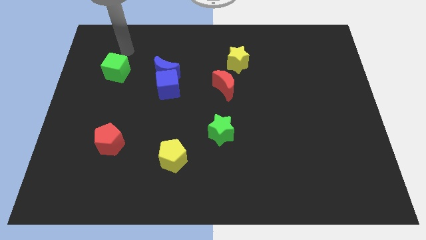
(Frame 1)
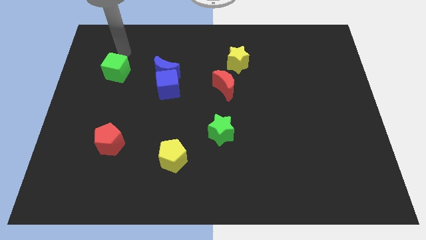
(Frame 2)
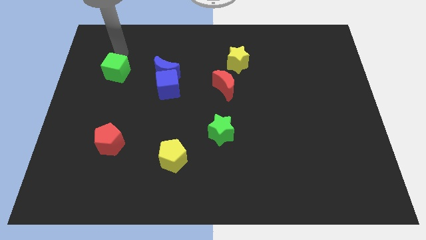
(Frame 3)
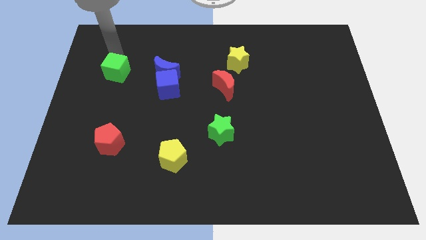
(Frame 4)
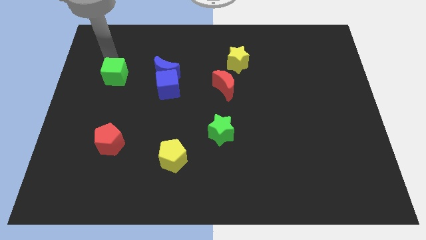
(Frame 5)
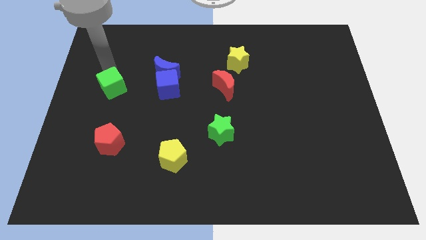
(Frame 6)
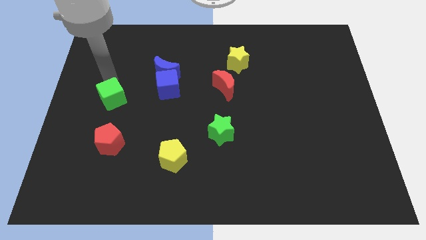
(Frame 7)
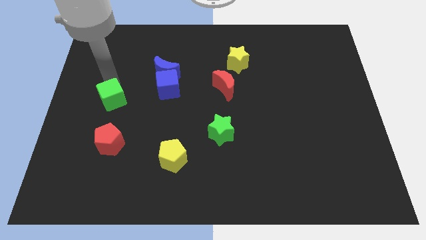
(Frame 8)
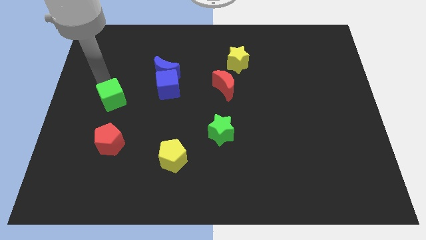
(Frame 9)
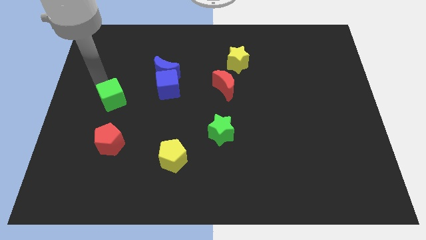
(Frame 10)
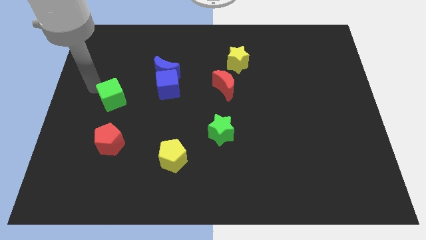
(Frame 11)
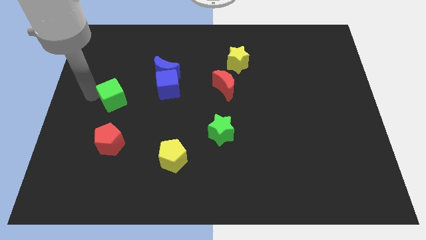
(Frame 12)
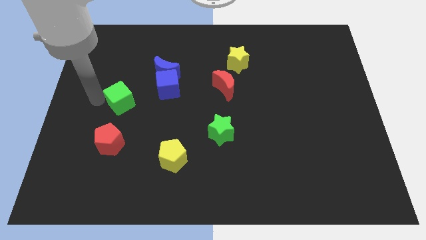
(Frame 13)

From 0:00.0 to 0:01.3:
push the green cube towards the red pentagon

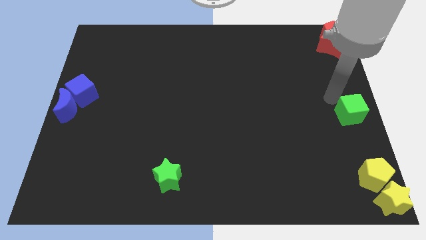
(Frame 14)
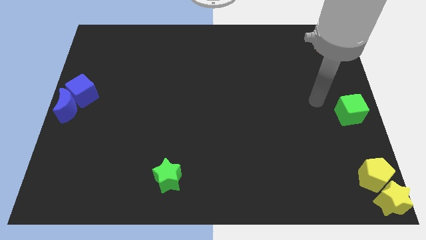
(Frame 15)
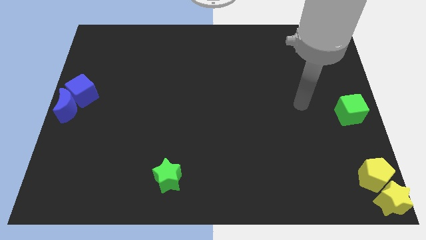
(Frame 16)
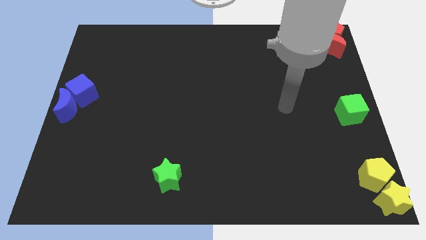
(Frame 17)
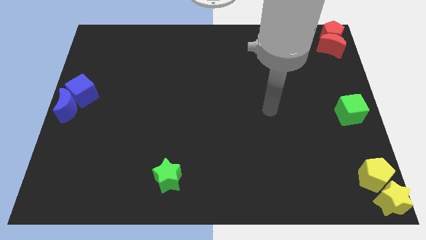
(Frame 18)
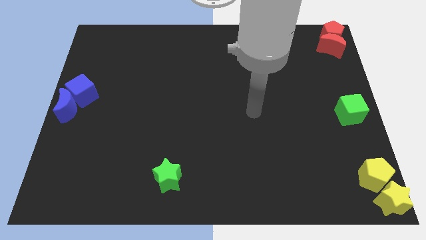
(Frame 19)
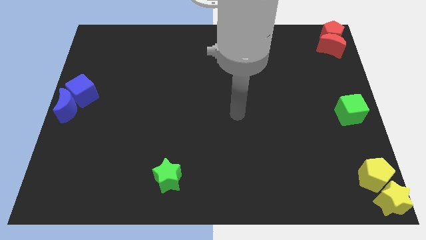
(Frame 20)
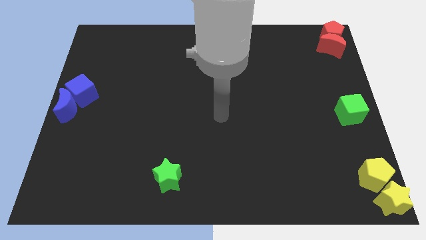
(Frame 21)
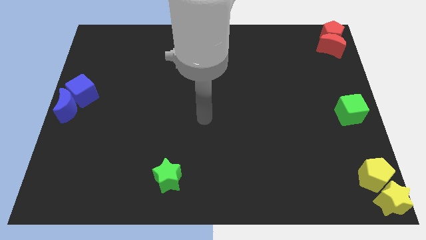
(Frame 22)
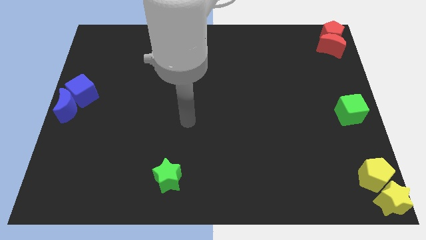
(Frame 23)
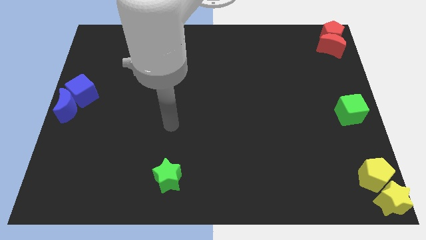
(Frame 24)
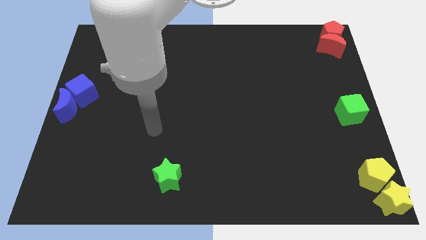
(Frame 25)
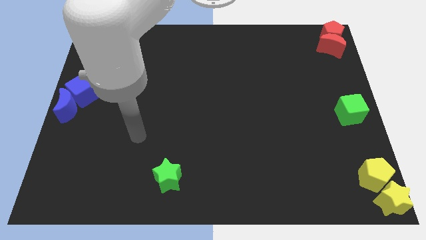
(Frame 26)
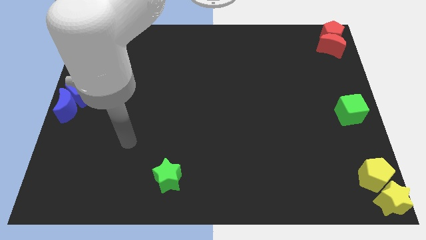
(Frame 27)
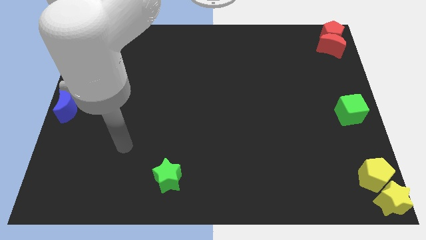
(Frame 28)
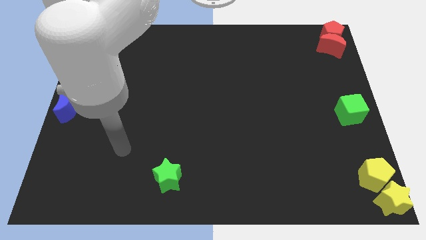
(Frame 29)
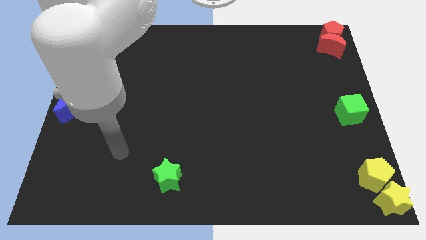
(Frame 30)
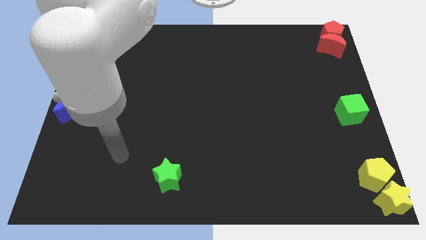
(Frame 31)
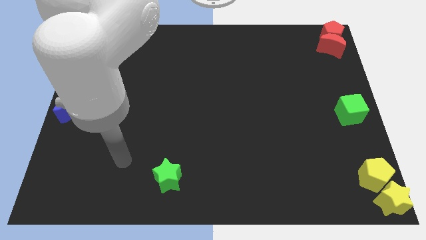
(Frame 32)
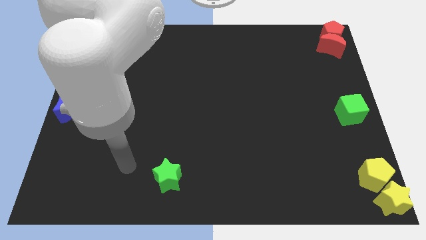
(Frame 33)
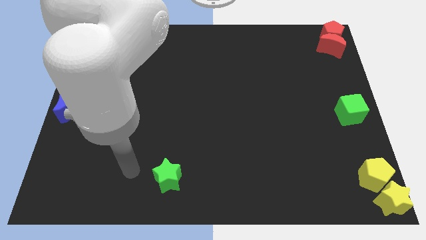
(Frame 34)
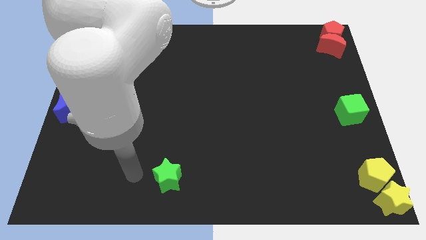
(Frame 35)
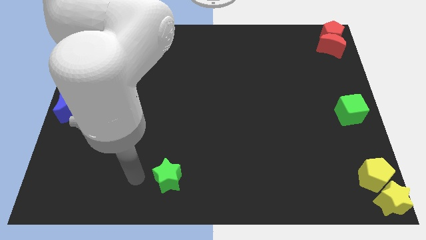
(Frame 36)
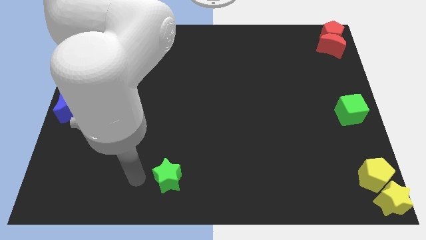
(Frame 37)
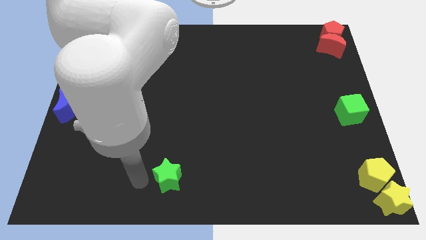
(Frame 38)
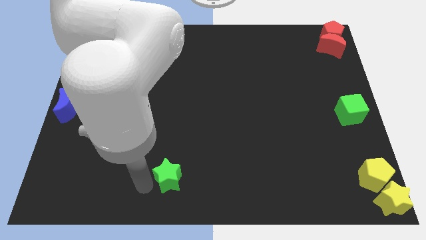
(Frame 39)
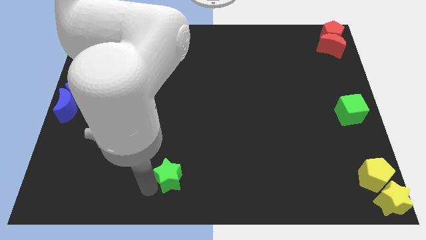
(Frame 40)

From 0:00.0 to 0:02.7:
point your arm to the left side of green star

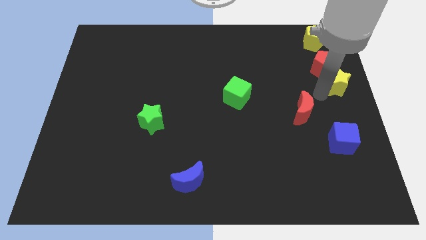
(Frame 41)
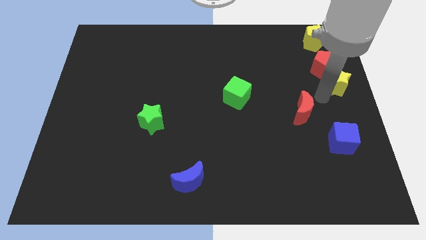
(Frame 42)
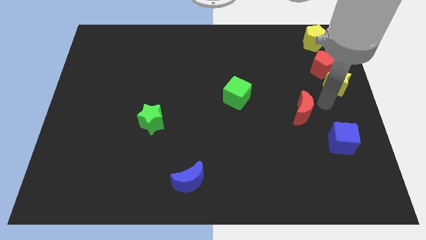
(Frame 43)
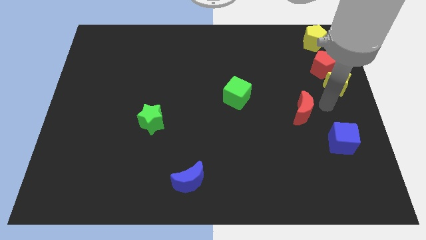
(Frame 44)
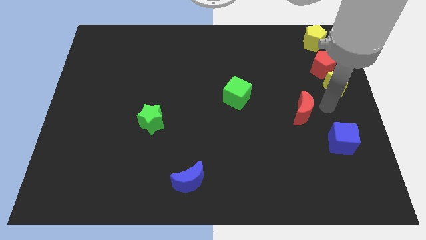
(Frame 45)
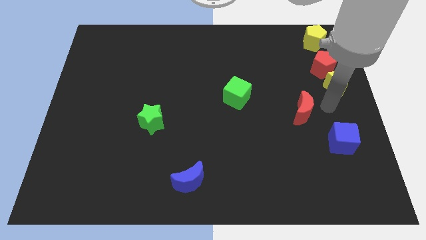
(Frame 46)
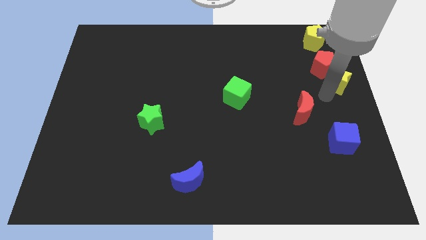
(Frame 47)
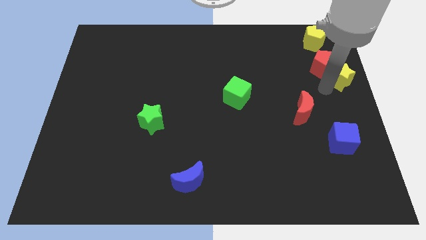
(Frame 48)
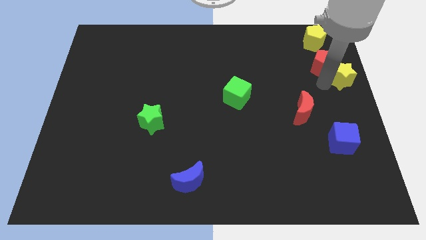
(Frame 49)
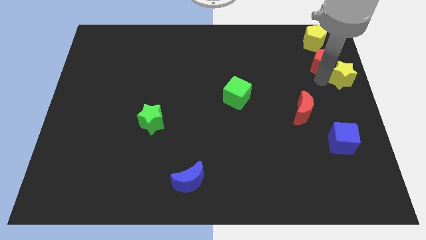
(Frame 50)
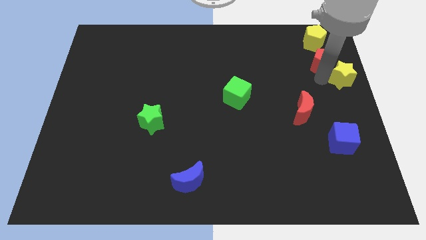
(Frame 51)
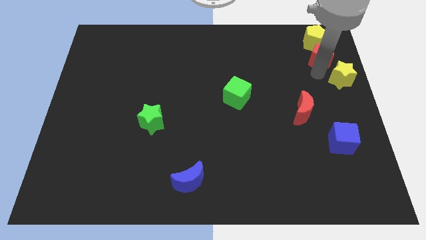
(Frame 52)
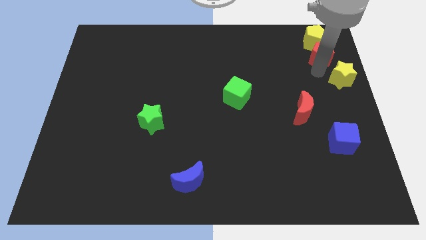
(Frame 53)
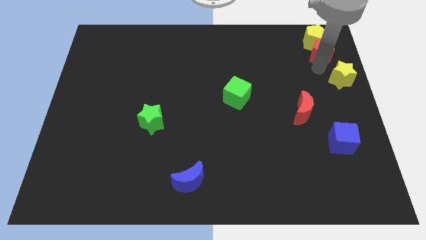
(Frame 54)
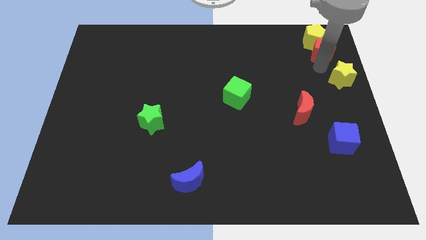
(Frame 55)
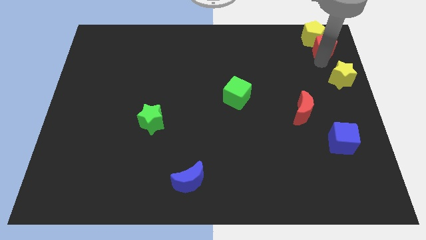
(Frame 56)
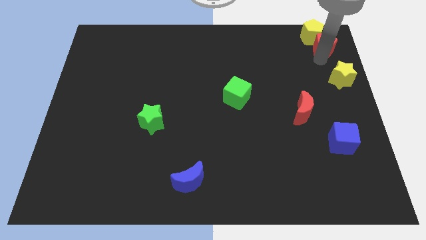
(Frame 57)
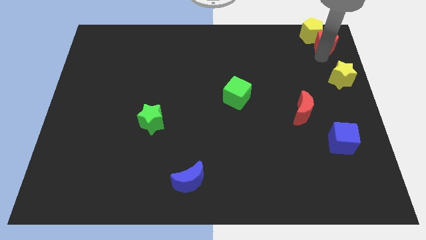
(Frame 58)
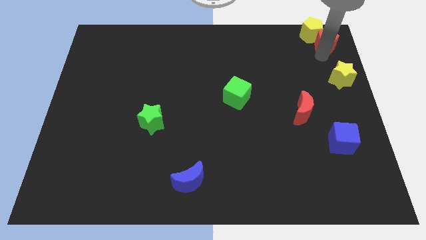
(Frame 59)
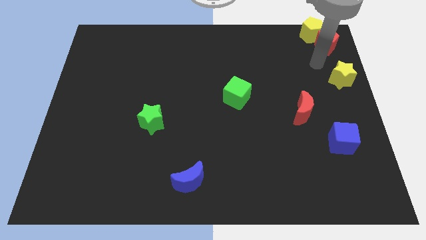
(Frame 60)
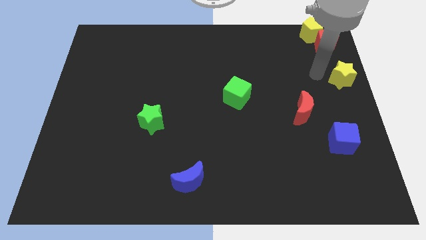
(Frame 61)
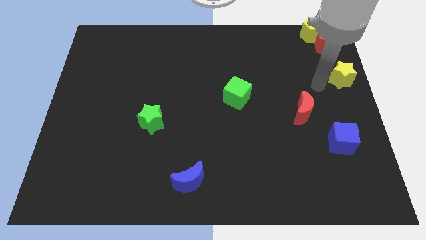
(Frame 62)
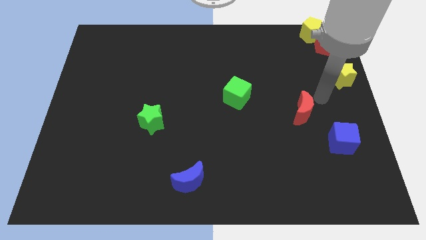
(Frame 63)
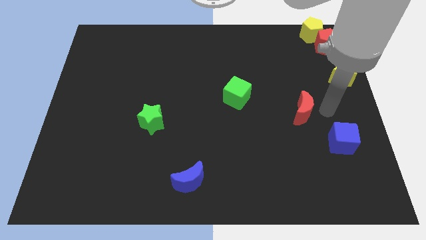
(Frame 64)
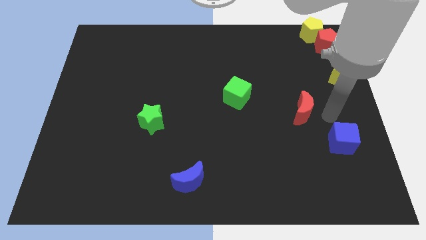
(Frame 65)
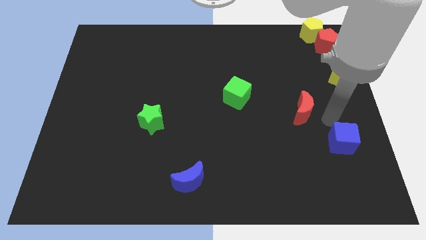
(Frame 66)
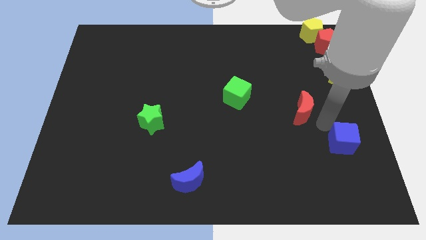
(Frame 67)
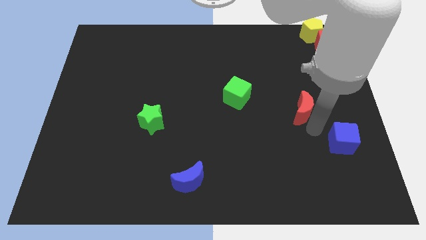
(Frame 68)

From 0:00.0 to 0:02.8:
push the red pentagon towards the top right corner of the board

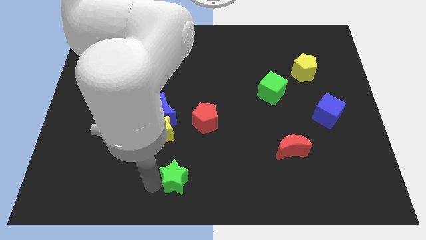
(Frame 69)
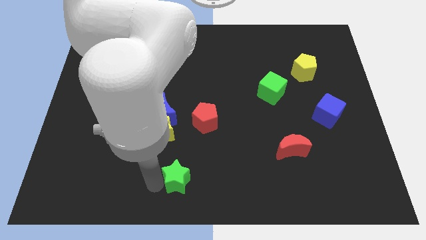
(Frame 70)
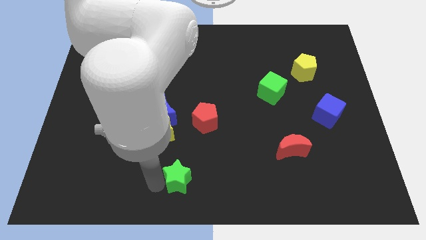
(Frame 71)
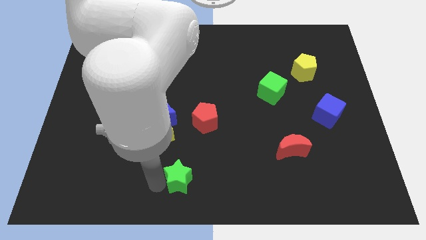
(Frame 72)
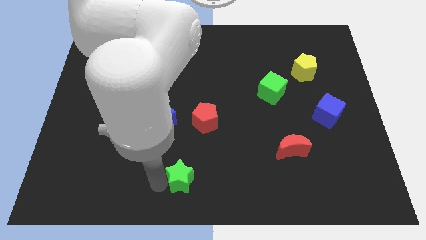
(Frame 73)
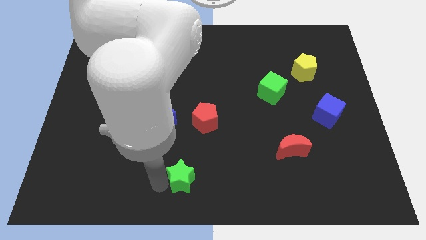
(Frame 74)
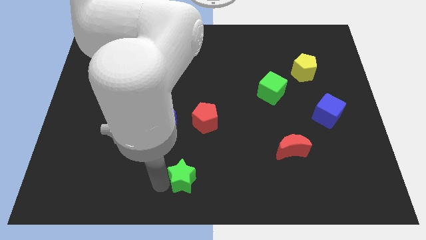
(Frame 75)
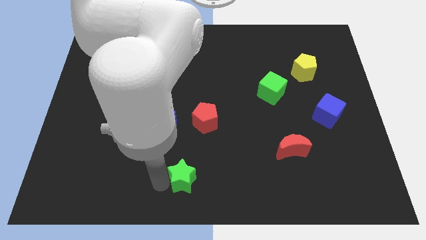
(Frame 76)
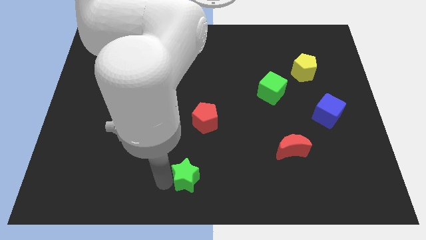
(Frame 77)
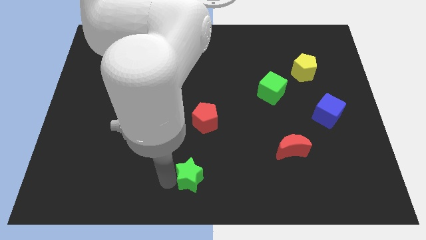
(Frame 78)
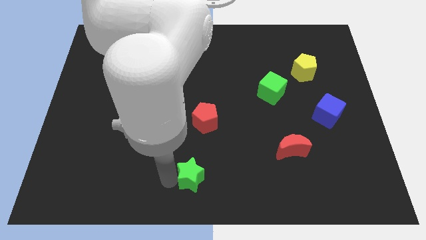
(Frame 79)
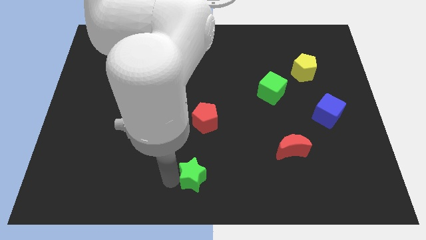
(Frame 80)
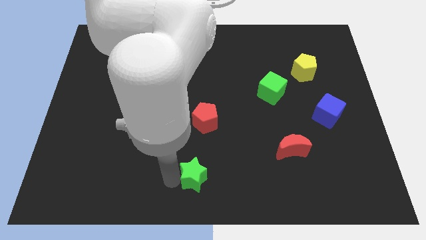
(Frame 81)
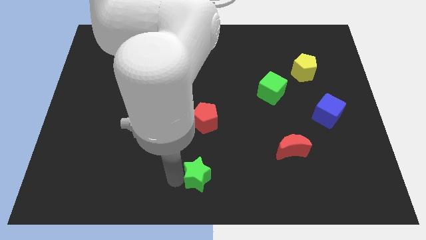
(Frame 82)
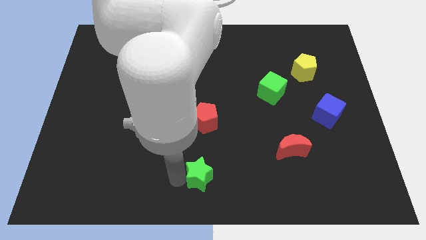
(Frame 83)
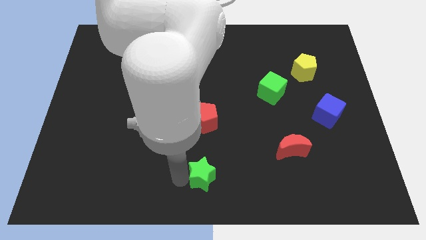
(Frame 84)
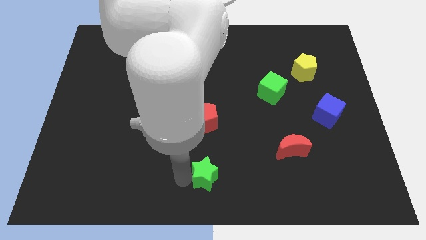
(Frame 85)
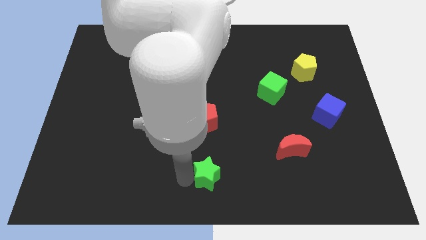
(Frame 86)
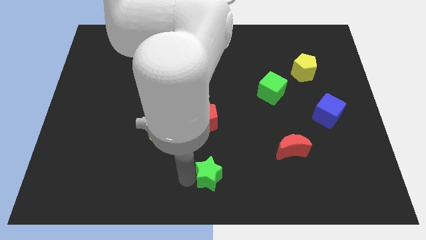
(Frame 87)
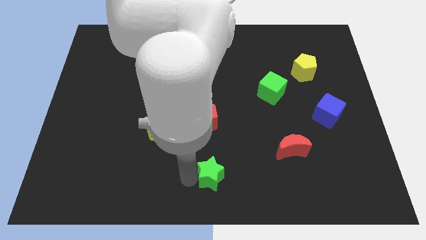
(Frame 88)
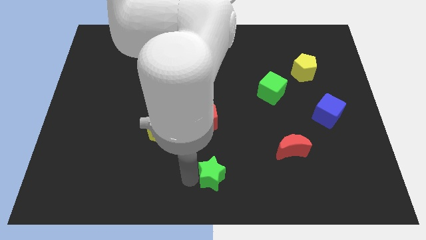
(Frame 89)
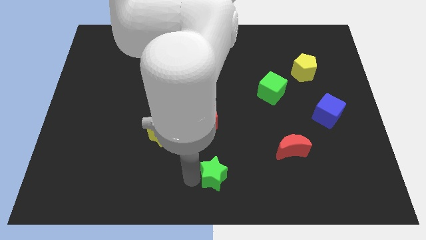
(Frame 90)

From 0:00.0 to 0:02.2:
push green star to the right bottom of red pentagon
